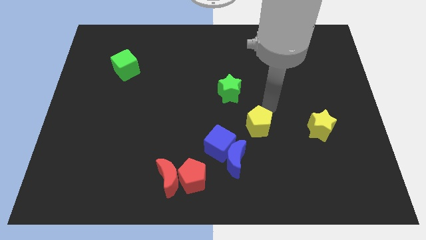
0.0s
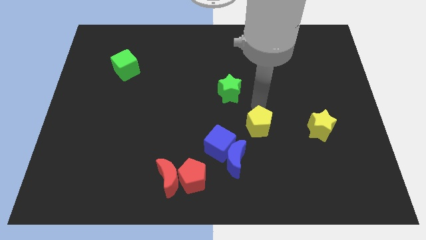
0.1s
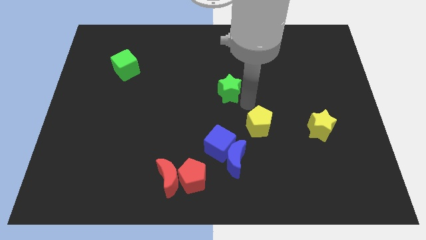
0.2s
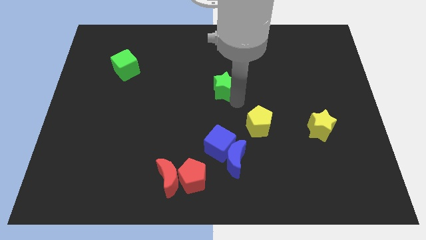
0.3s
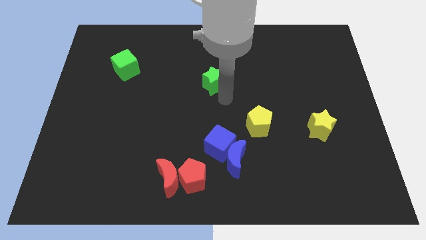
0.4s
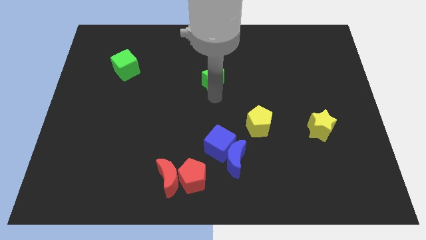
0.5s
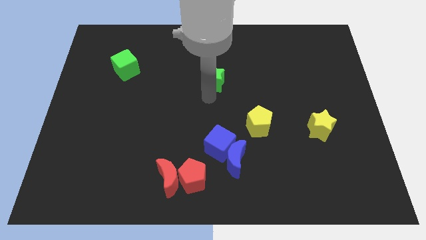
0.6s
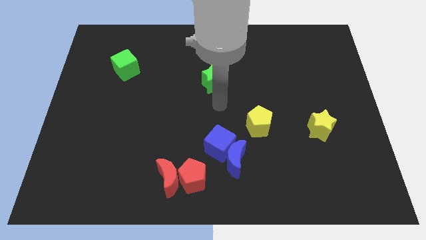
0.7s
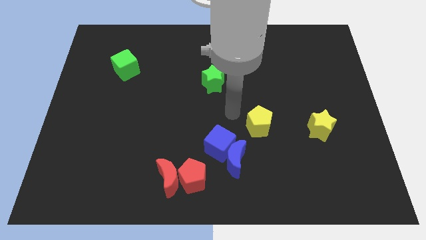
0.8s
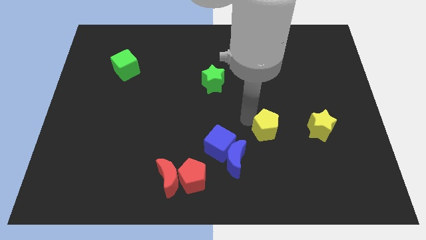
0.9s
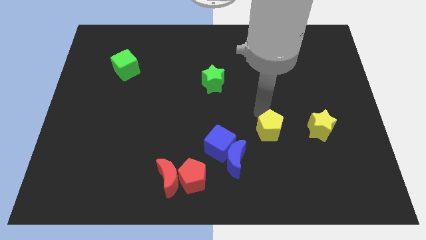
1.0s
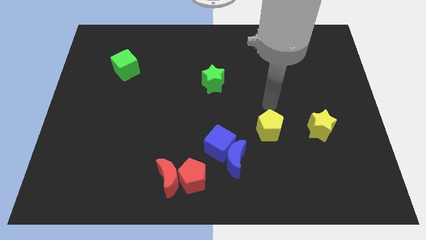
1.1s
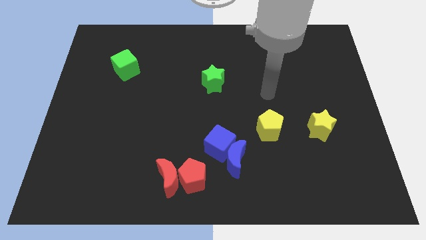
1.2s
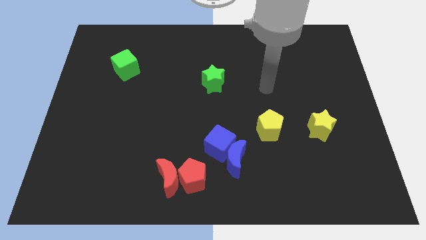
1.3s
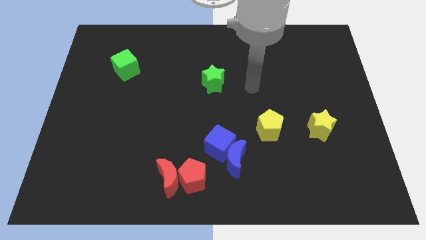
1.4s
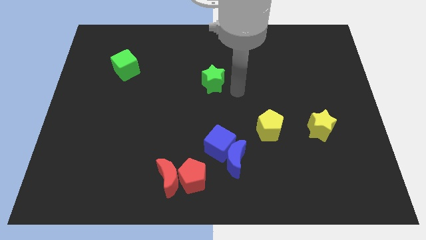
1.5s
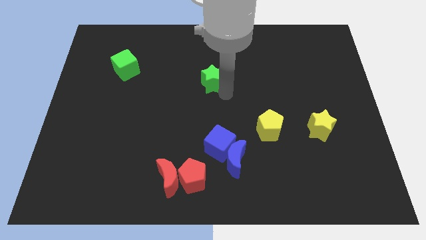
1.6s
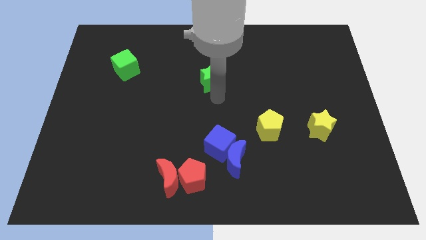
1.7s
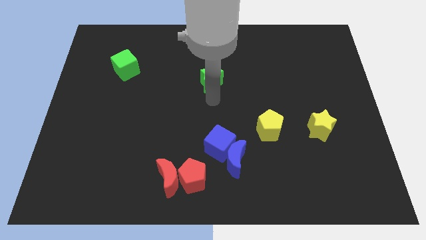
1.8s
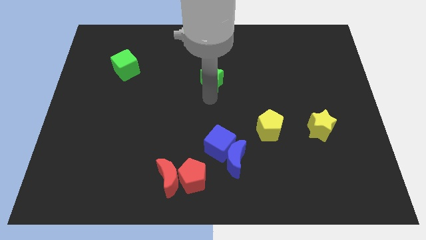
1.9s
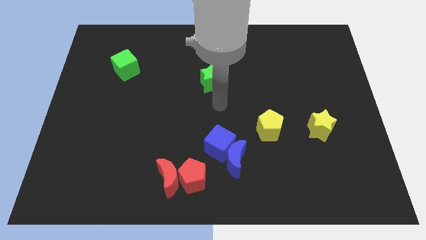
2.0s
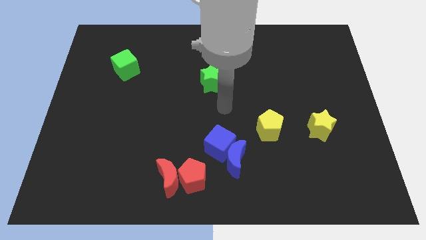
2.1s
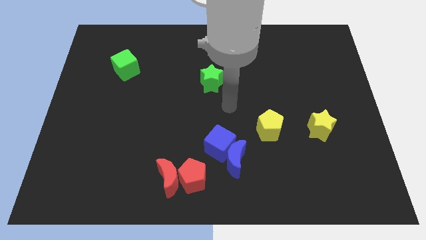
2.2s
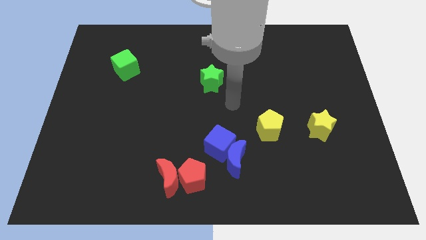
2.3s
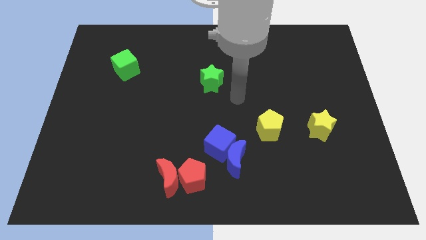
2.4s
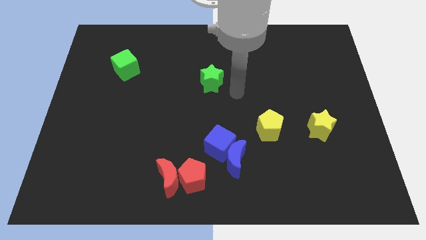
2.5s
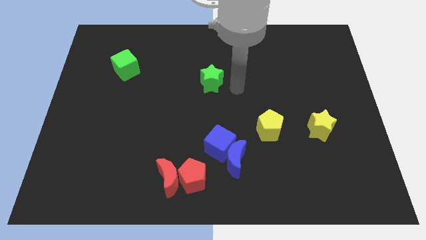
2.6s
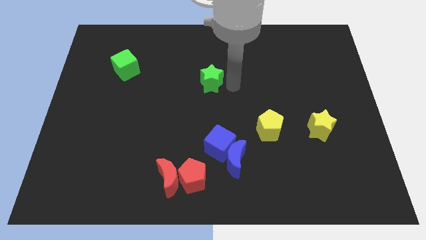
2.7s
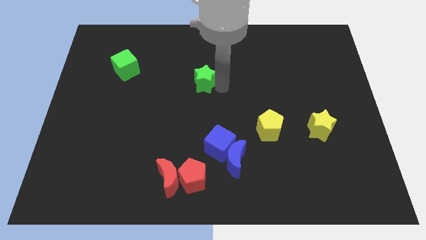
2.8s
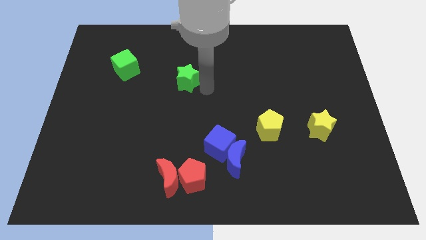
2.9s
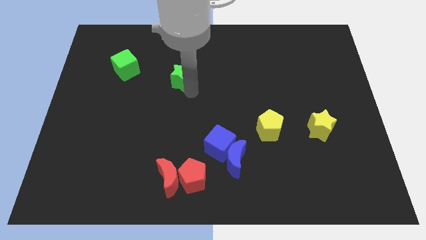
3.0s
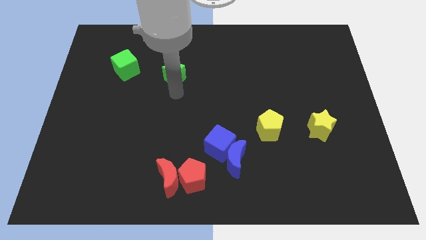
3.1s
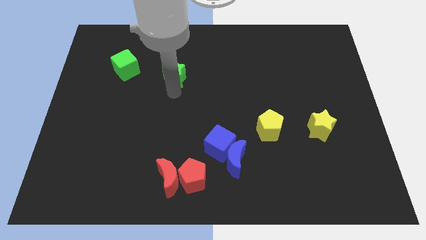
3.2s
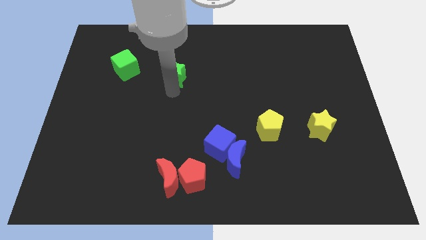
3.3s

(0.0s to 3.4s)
move the green star near the green cube

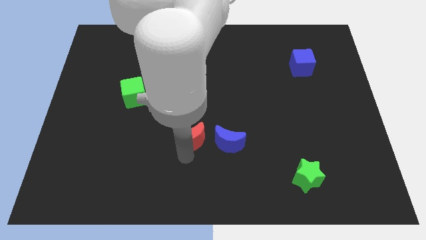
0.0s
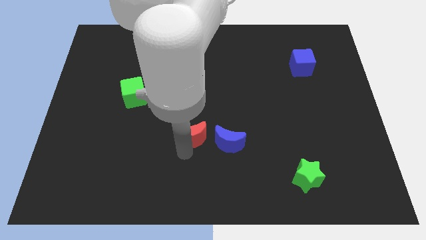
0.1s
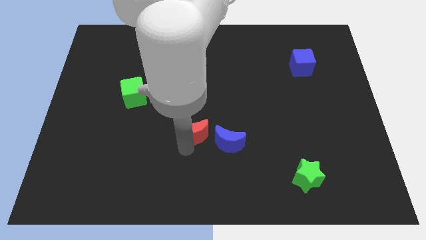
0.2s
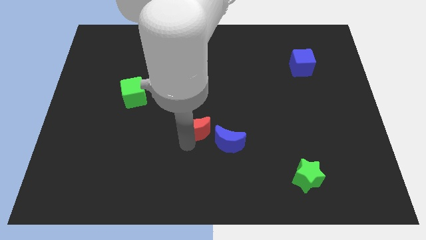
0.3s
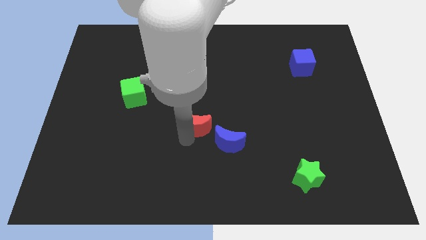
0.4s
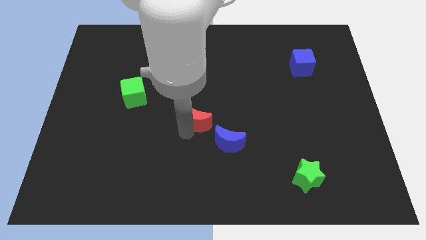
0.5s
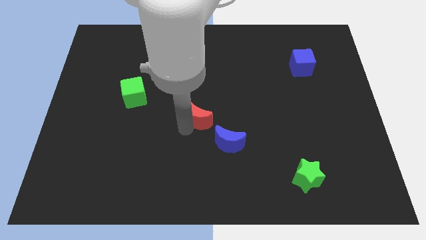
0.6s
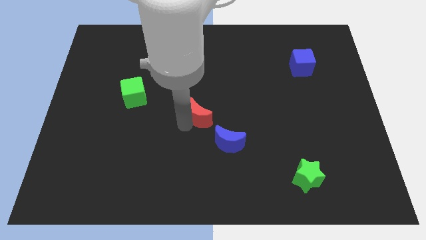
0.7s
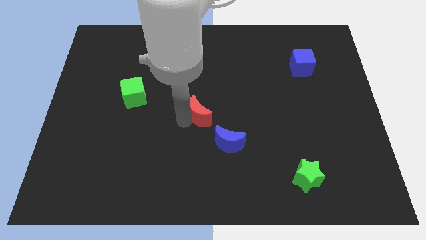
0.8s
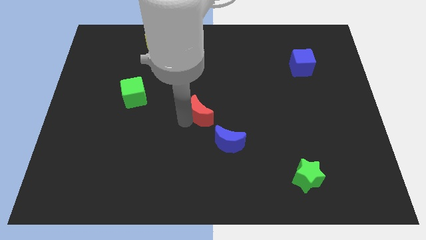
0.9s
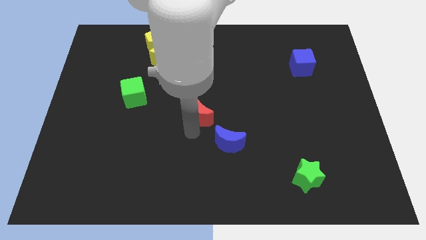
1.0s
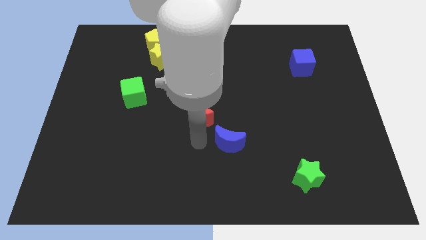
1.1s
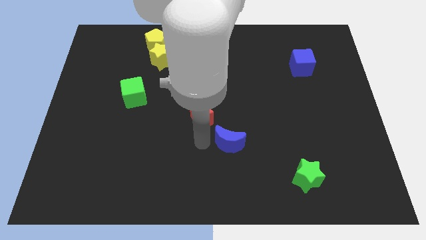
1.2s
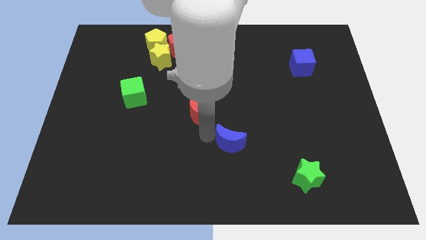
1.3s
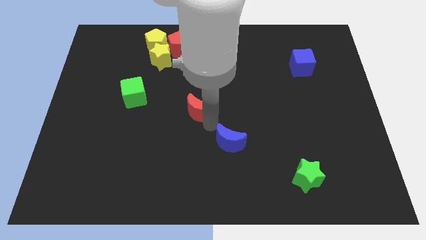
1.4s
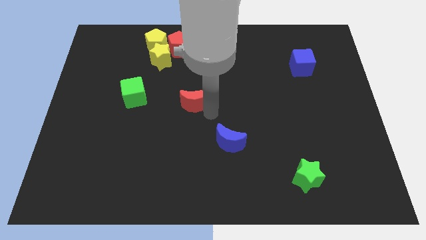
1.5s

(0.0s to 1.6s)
push the red moon diagonally top left to the blue moon

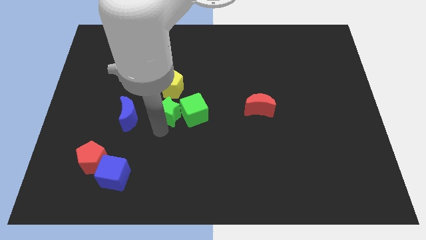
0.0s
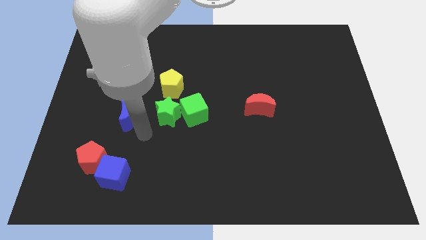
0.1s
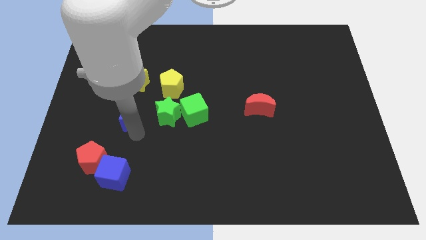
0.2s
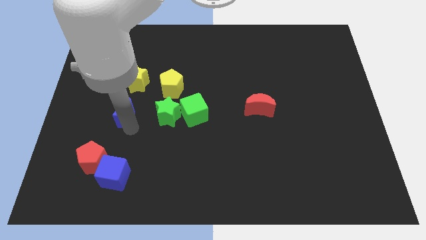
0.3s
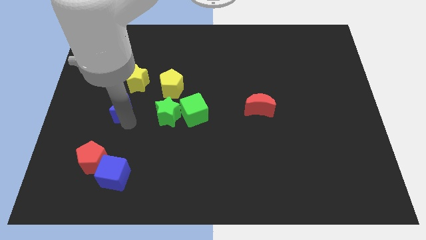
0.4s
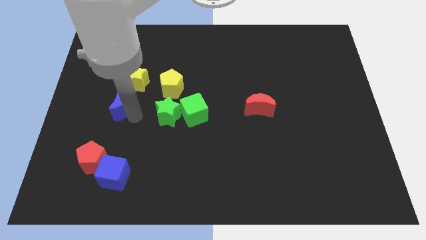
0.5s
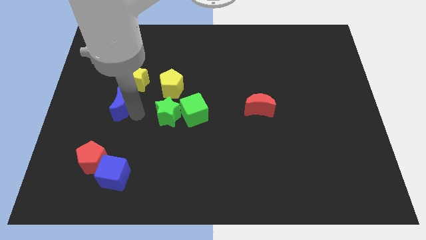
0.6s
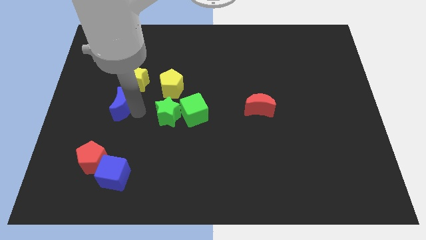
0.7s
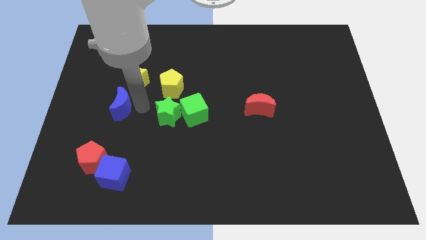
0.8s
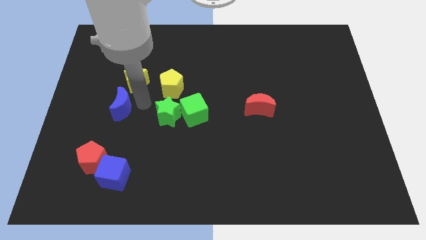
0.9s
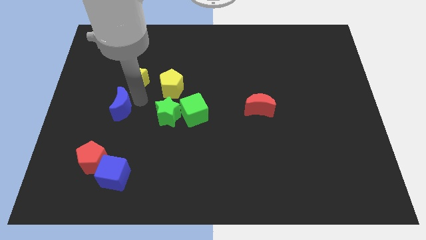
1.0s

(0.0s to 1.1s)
move the blue crescent slightly top left

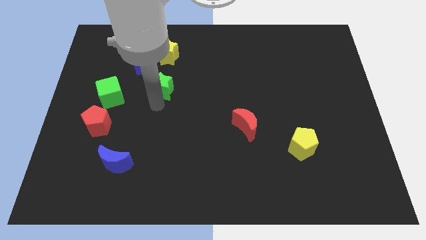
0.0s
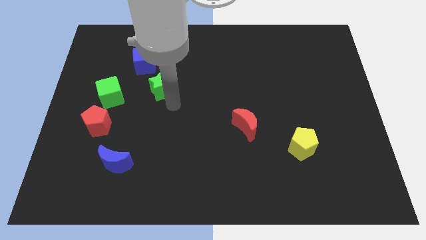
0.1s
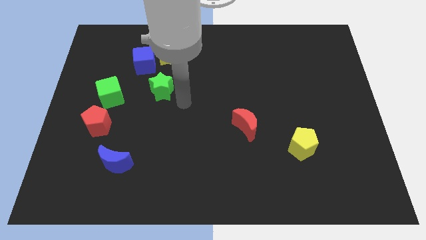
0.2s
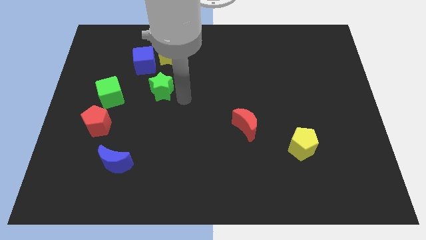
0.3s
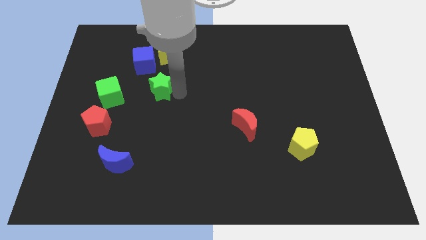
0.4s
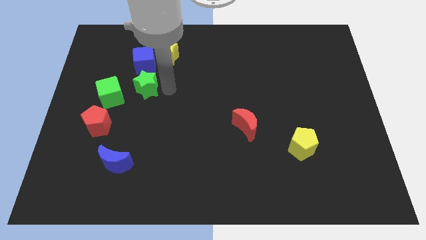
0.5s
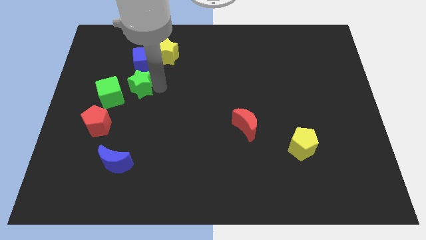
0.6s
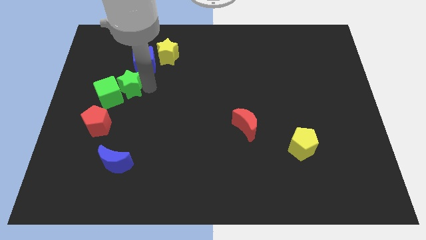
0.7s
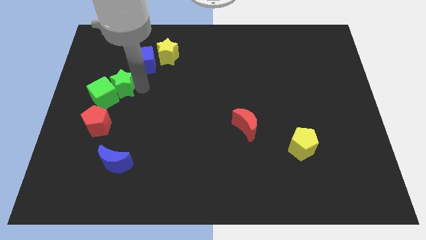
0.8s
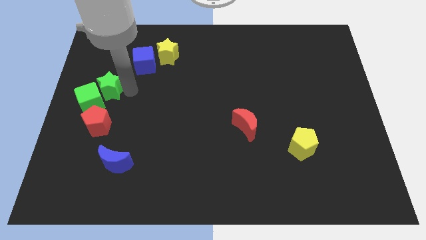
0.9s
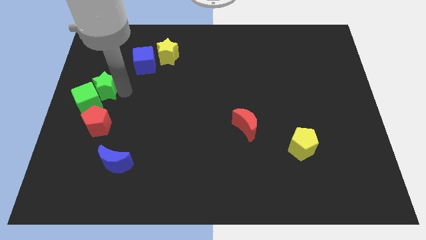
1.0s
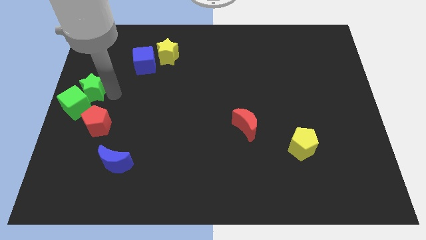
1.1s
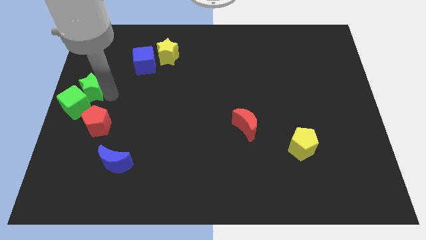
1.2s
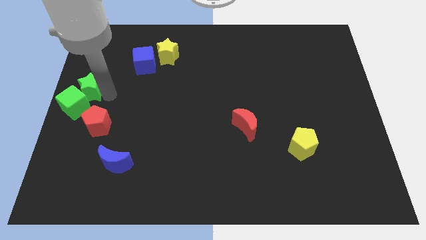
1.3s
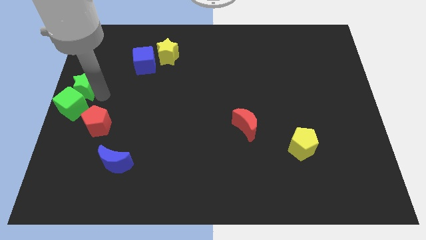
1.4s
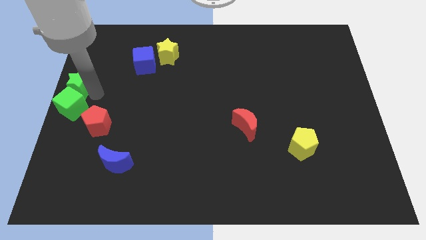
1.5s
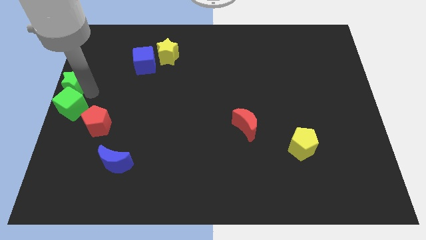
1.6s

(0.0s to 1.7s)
place the green blocks at the center left side of the board

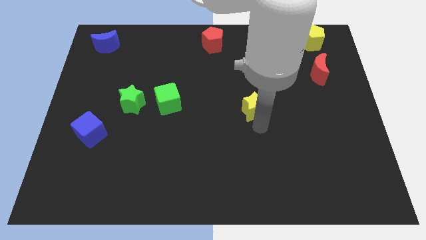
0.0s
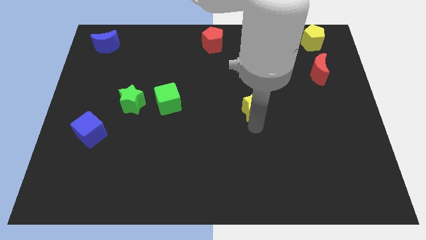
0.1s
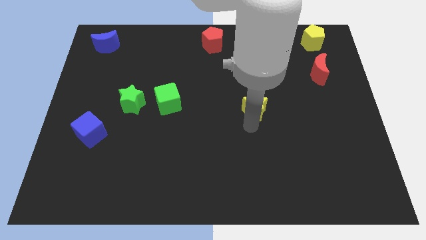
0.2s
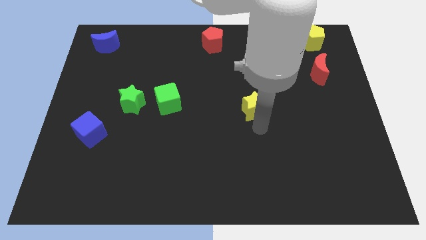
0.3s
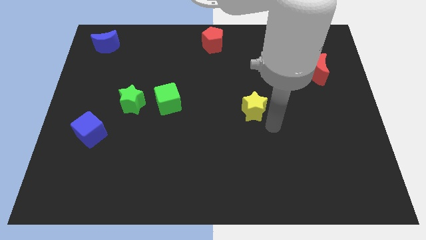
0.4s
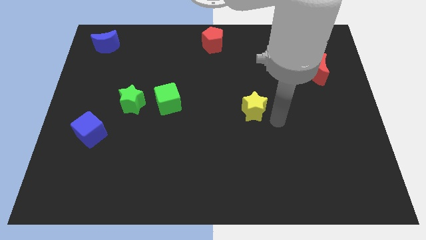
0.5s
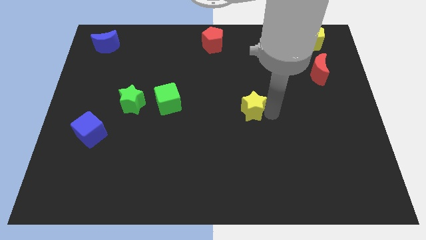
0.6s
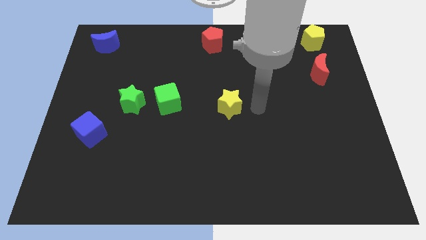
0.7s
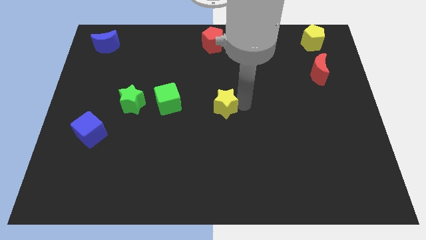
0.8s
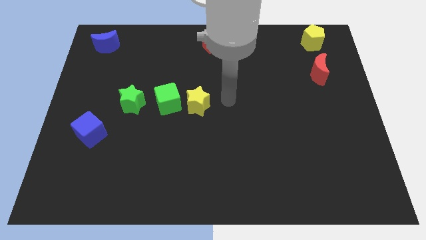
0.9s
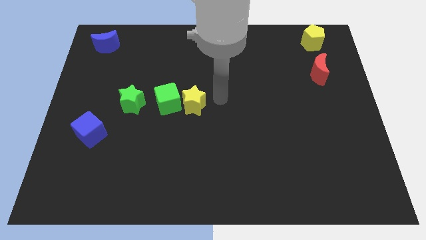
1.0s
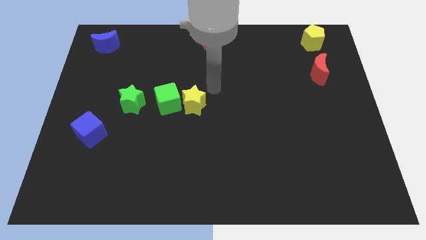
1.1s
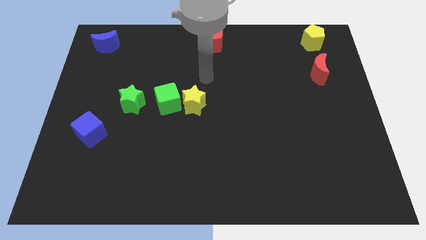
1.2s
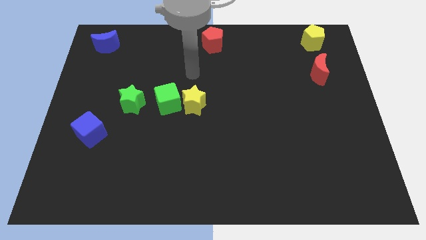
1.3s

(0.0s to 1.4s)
push the yellow star to the right of the green cube
